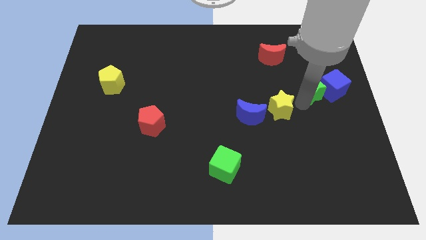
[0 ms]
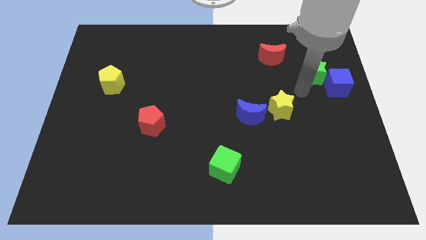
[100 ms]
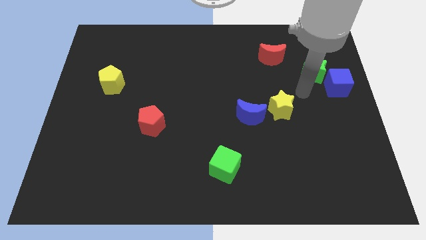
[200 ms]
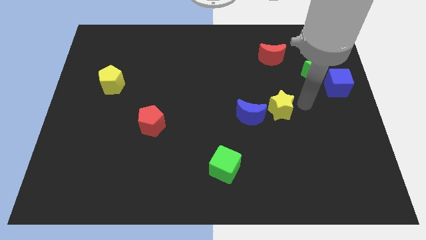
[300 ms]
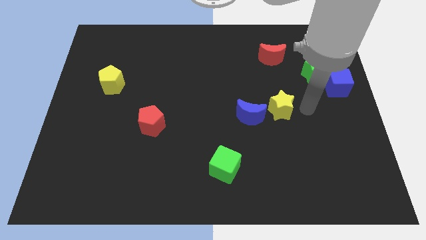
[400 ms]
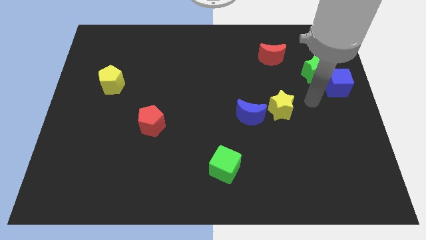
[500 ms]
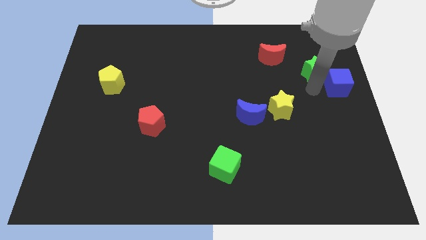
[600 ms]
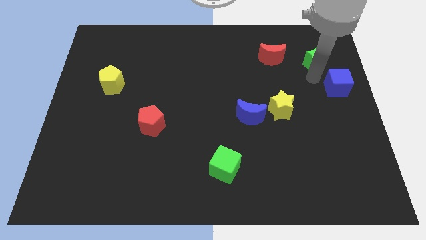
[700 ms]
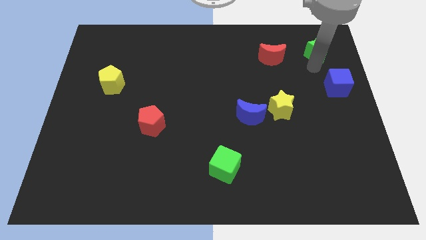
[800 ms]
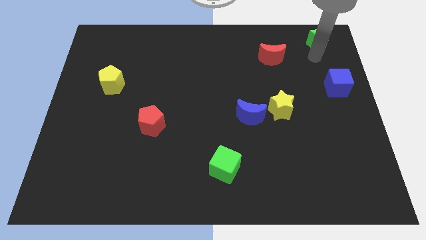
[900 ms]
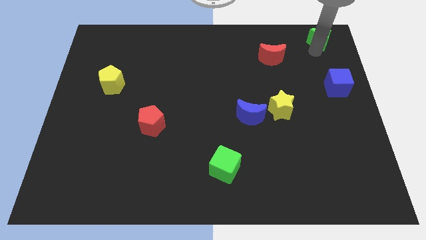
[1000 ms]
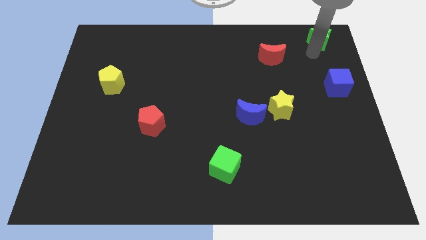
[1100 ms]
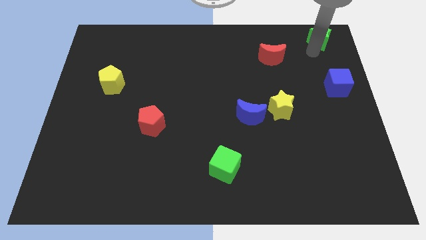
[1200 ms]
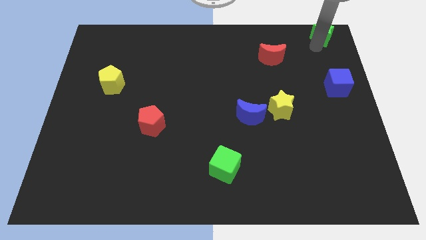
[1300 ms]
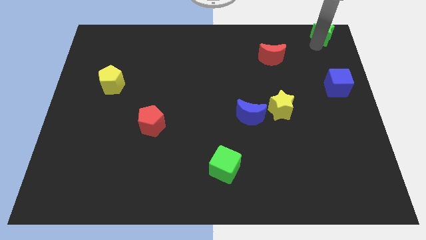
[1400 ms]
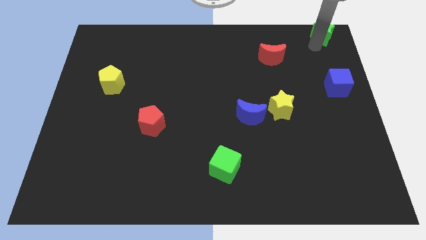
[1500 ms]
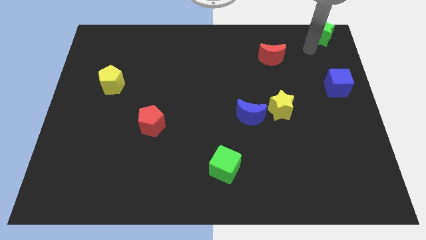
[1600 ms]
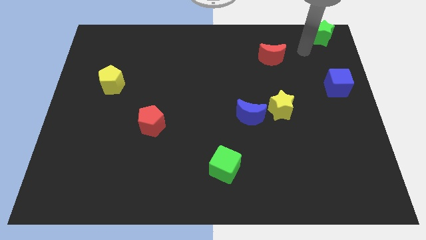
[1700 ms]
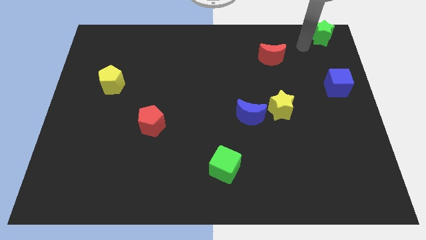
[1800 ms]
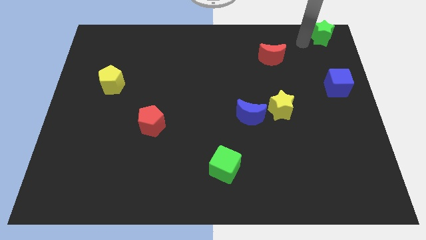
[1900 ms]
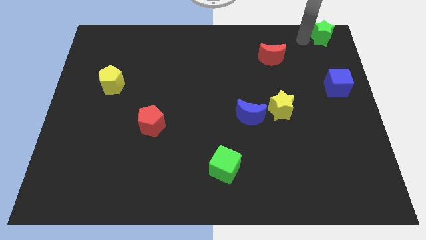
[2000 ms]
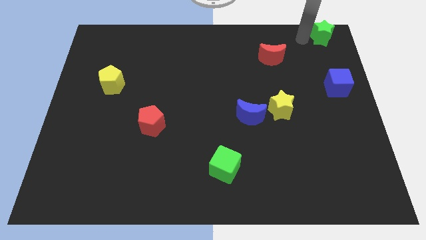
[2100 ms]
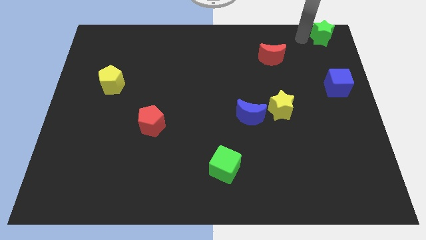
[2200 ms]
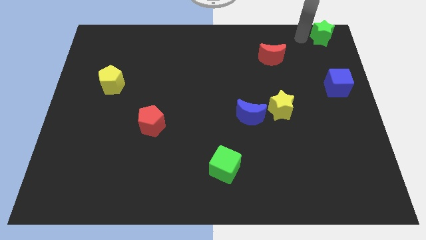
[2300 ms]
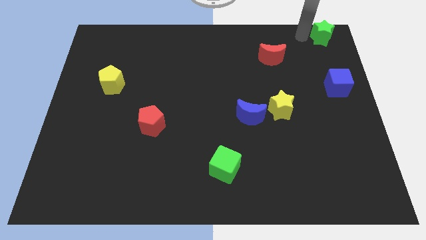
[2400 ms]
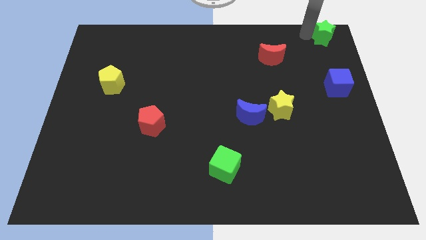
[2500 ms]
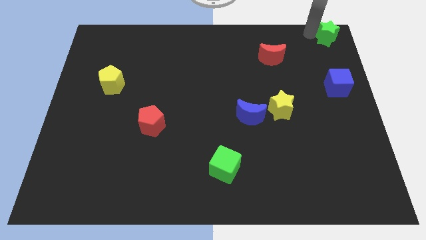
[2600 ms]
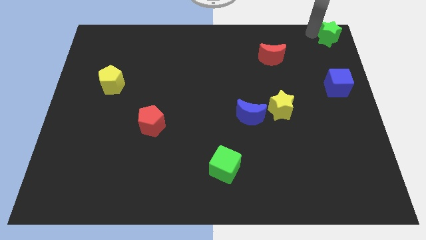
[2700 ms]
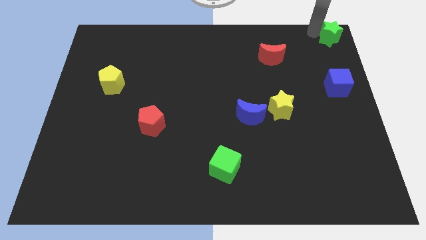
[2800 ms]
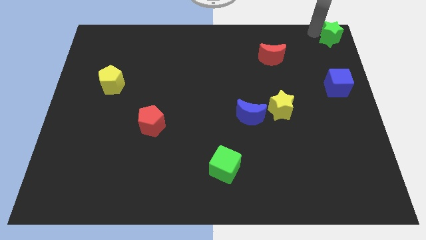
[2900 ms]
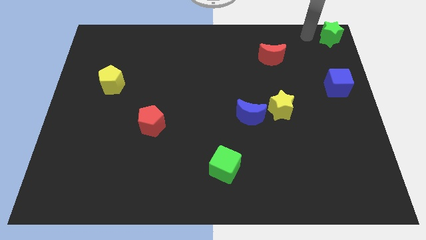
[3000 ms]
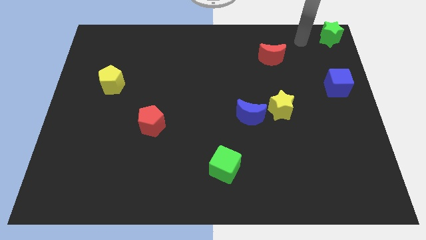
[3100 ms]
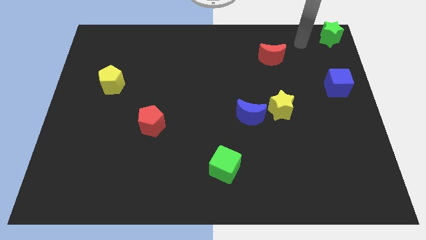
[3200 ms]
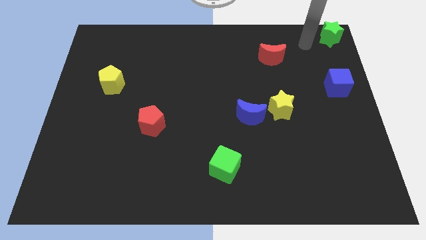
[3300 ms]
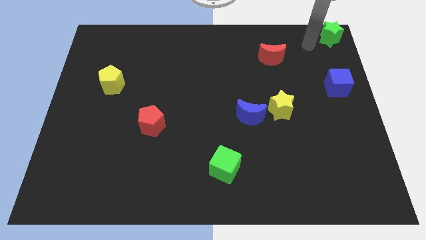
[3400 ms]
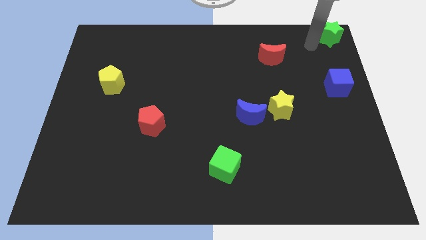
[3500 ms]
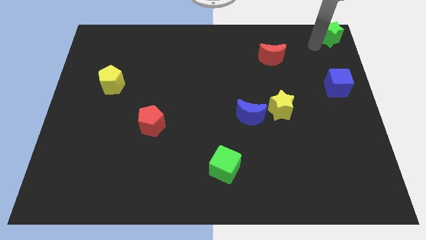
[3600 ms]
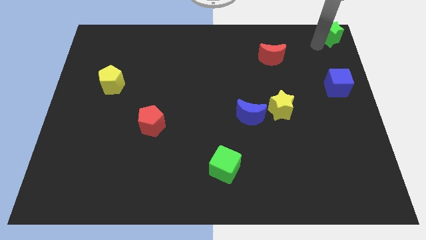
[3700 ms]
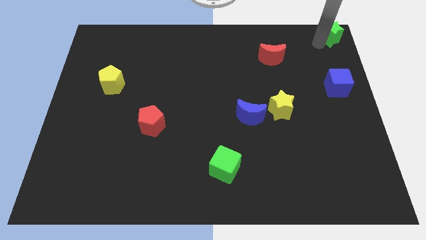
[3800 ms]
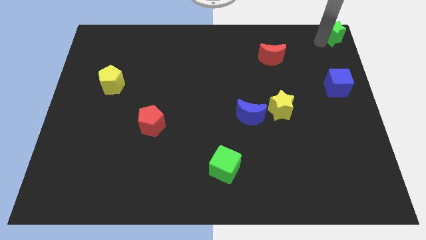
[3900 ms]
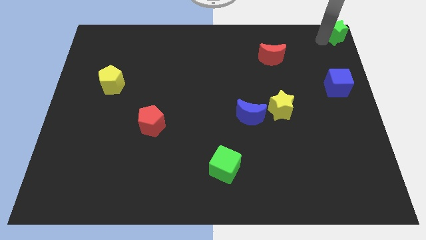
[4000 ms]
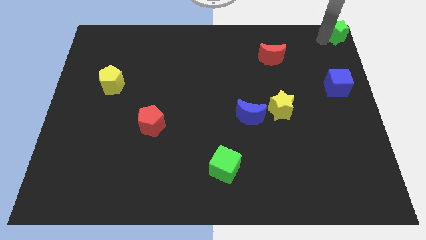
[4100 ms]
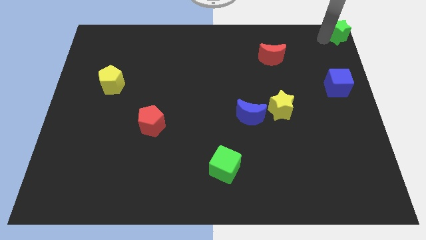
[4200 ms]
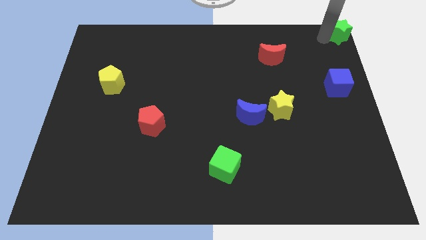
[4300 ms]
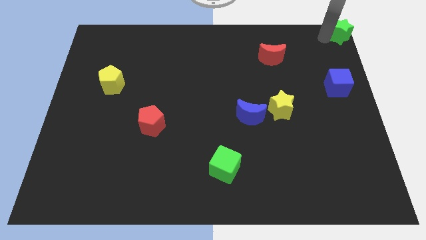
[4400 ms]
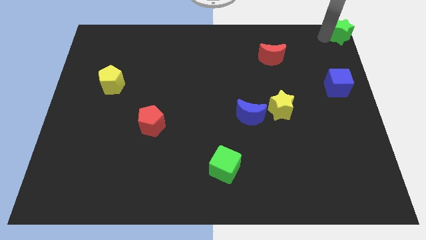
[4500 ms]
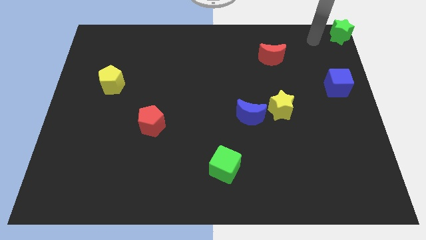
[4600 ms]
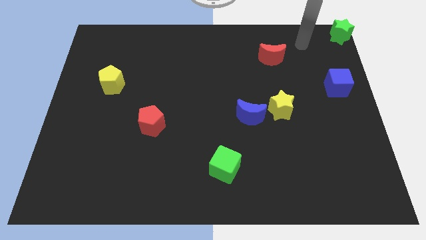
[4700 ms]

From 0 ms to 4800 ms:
push the green star at the top right corner

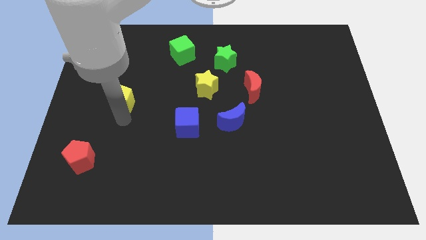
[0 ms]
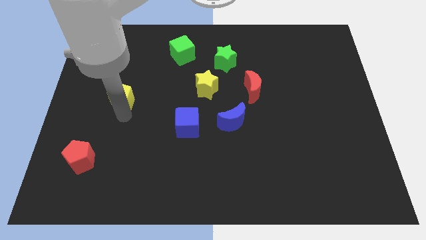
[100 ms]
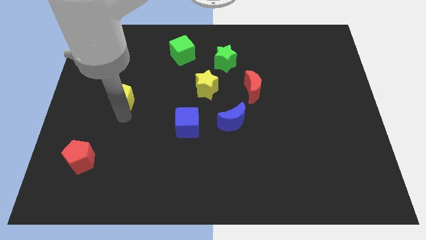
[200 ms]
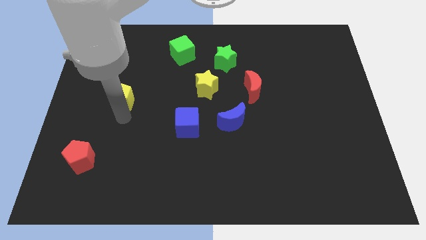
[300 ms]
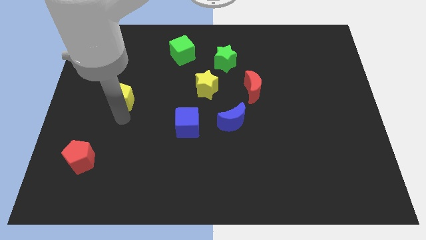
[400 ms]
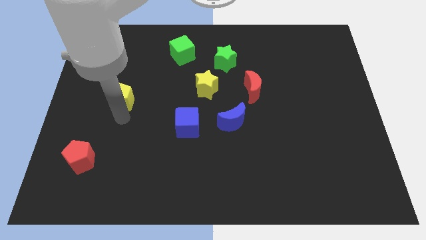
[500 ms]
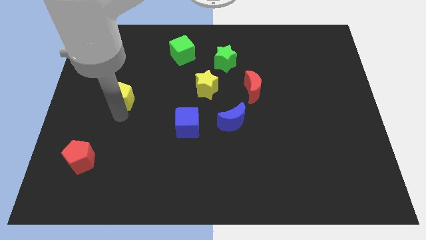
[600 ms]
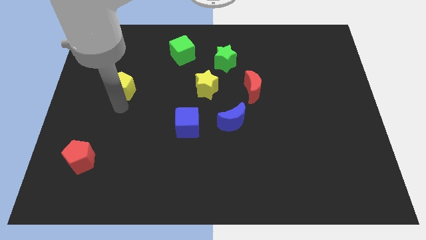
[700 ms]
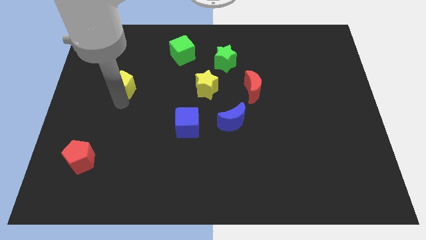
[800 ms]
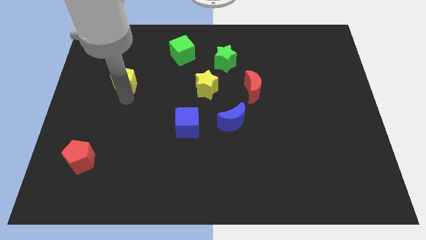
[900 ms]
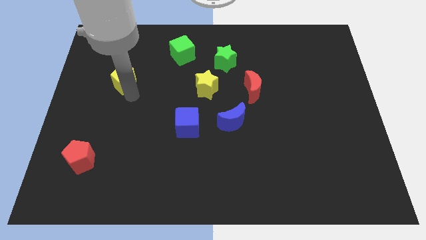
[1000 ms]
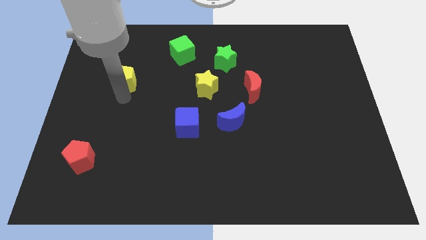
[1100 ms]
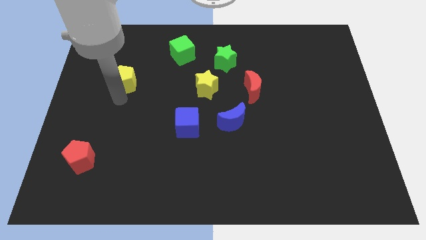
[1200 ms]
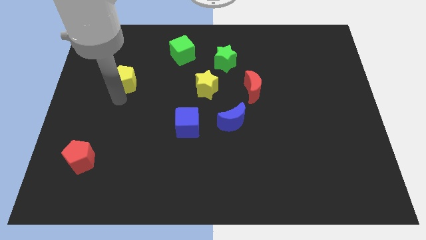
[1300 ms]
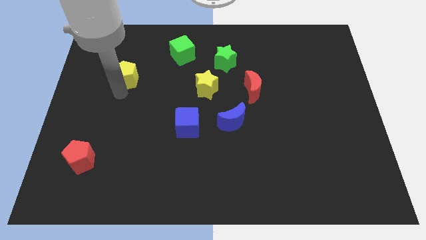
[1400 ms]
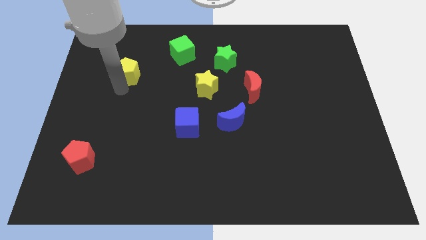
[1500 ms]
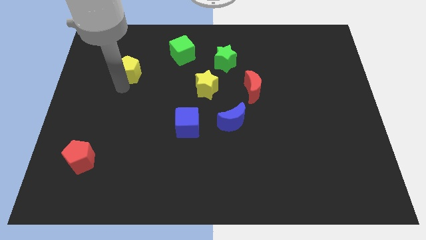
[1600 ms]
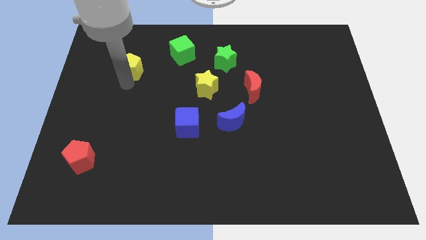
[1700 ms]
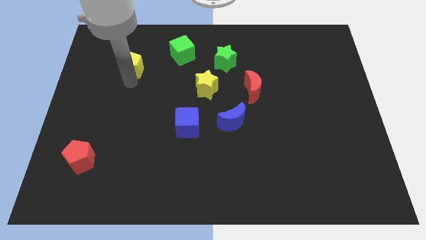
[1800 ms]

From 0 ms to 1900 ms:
move the yellow pentagon to the top left of the board

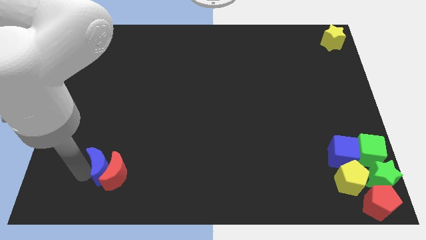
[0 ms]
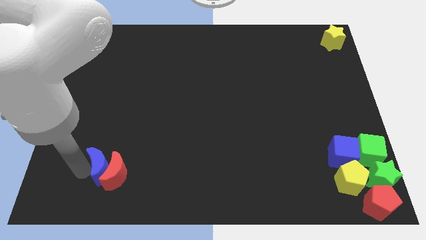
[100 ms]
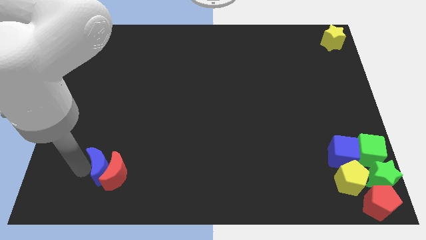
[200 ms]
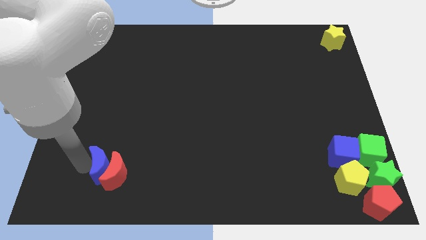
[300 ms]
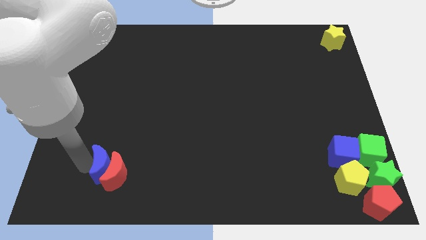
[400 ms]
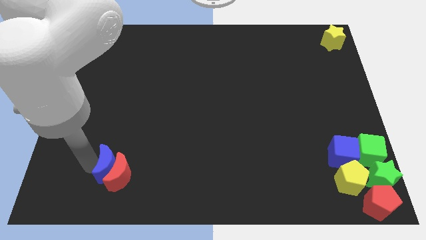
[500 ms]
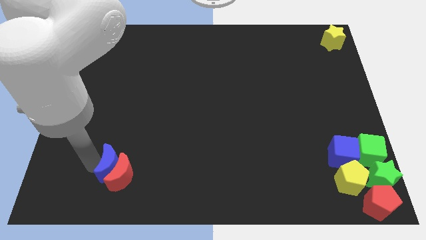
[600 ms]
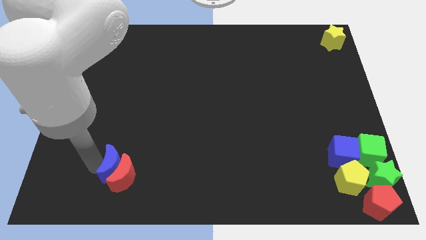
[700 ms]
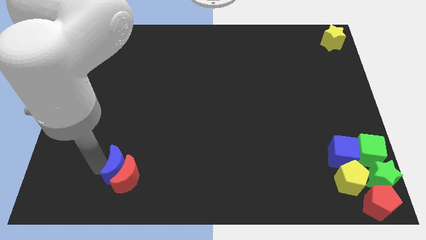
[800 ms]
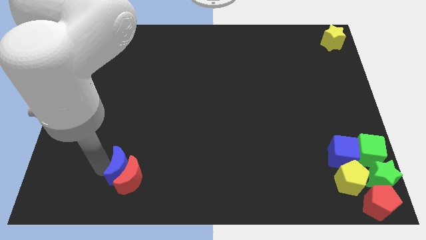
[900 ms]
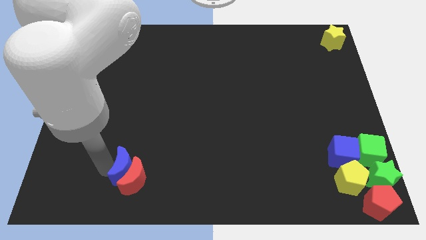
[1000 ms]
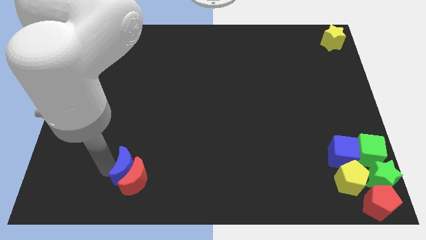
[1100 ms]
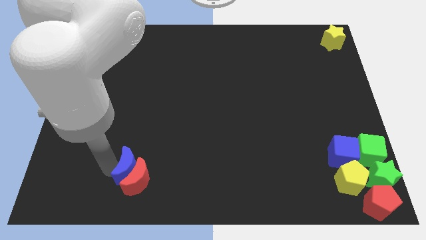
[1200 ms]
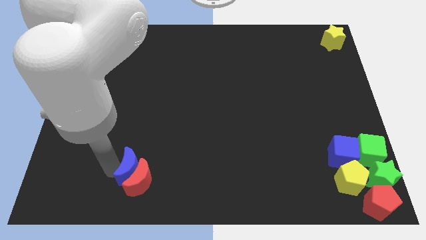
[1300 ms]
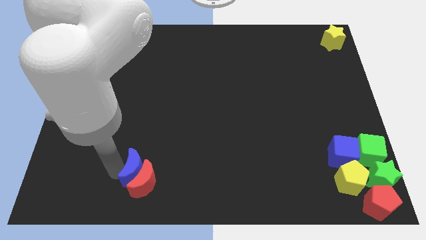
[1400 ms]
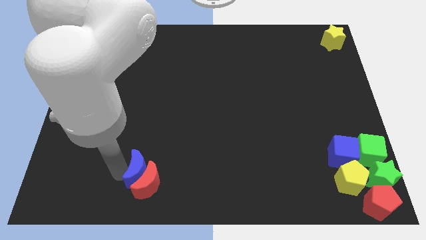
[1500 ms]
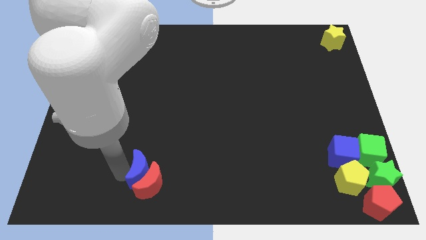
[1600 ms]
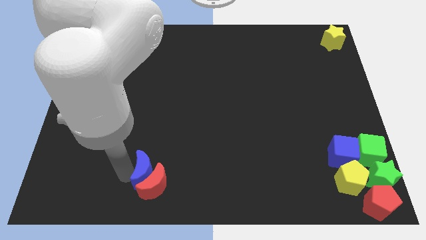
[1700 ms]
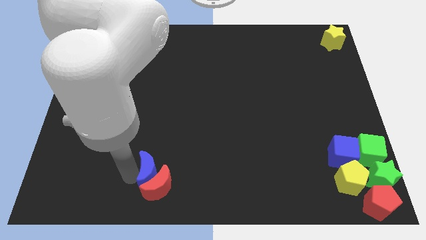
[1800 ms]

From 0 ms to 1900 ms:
push red moon and blue crescent towards the bottom center
